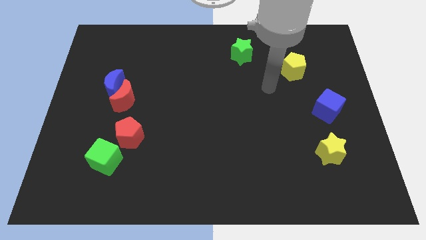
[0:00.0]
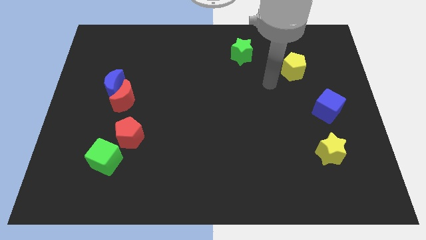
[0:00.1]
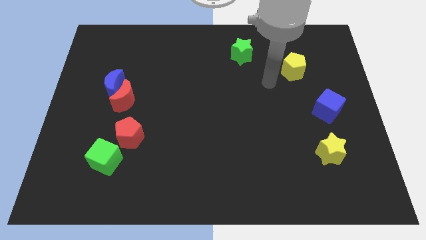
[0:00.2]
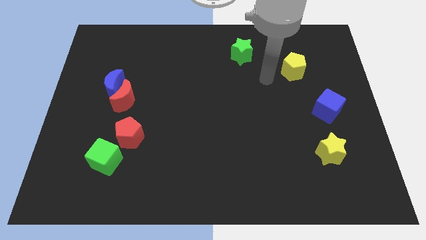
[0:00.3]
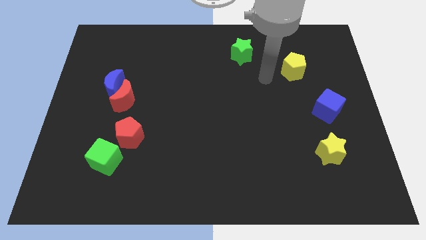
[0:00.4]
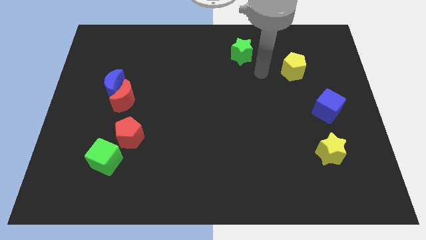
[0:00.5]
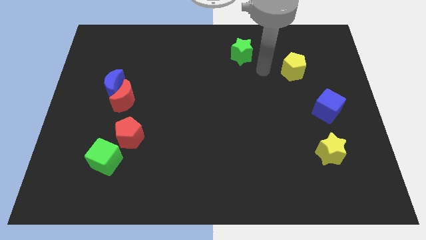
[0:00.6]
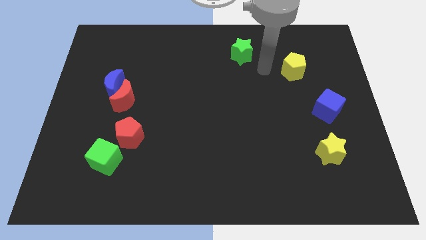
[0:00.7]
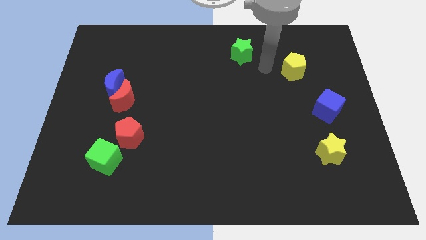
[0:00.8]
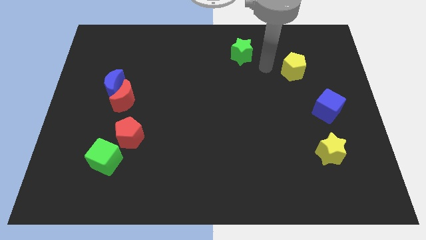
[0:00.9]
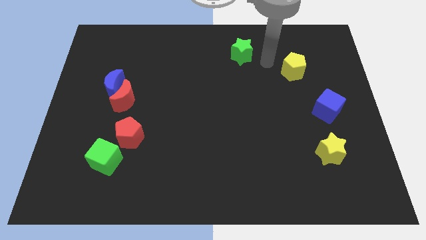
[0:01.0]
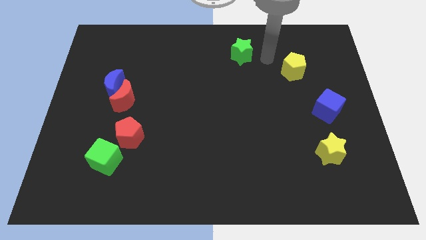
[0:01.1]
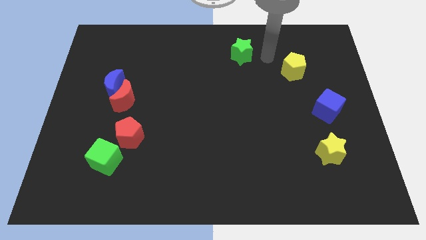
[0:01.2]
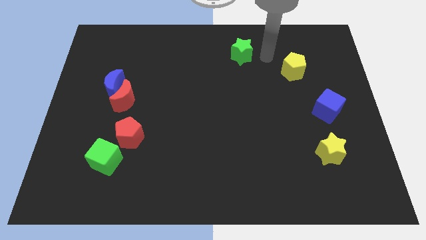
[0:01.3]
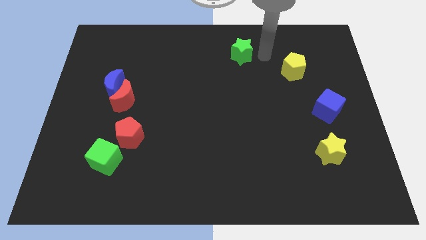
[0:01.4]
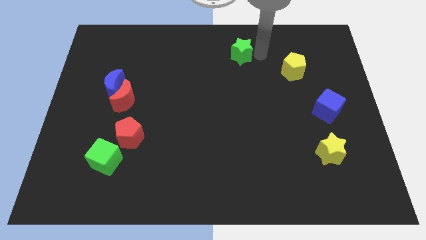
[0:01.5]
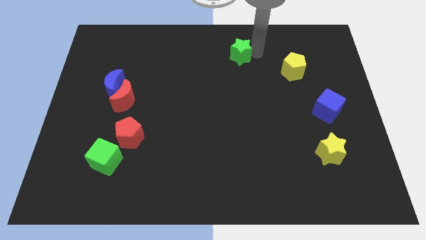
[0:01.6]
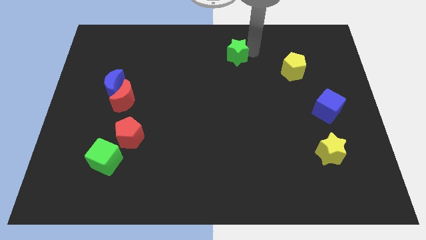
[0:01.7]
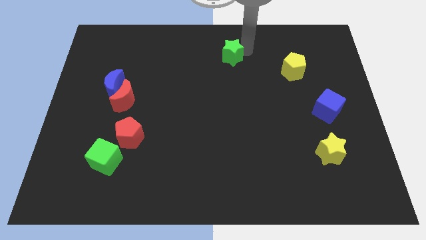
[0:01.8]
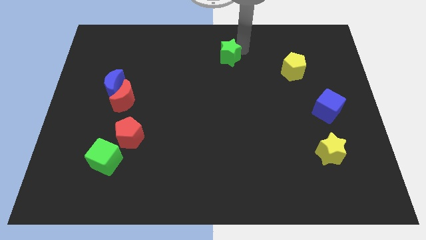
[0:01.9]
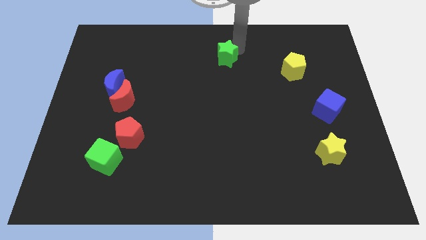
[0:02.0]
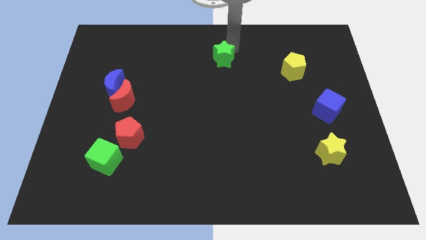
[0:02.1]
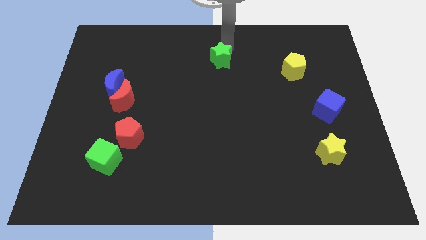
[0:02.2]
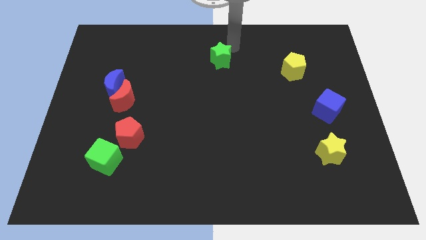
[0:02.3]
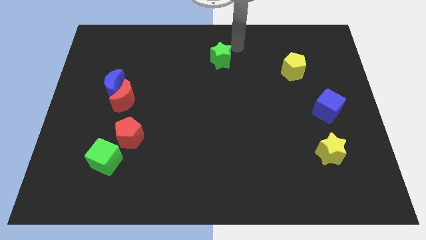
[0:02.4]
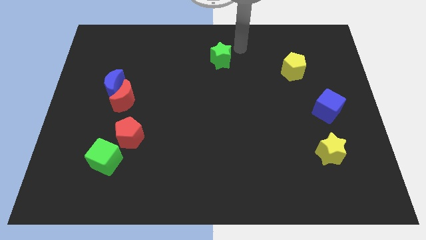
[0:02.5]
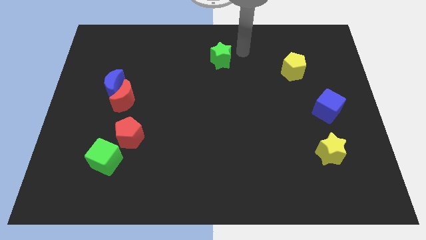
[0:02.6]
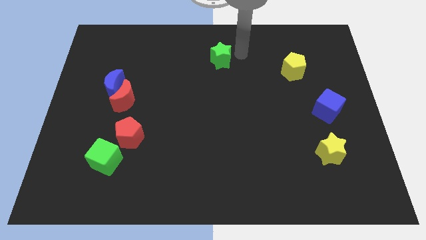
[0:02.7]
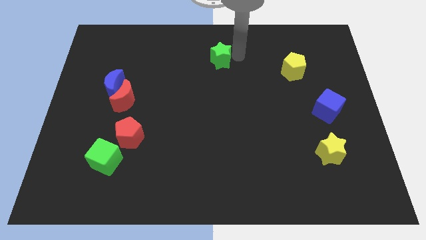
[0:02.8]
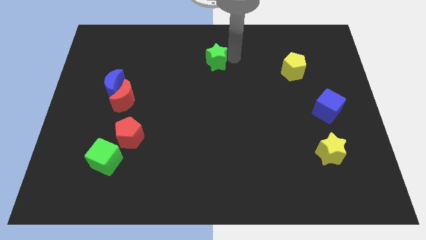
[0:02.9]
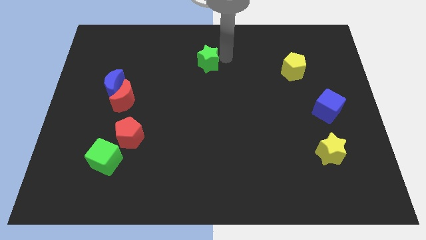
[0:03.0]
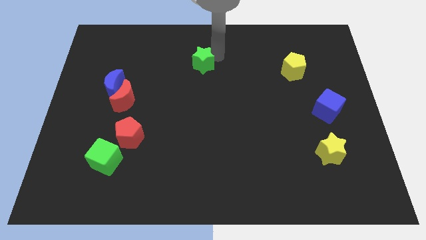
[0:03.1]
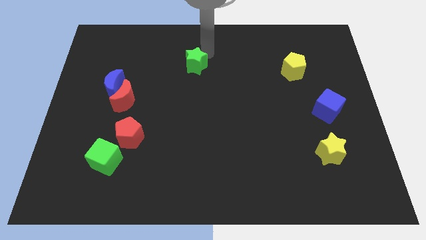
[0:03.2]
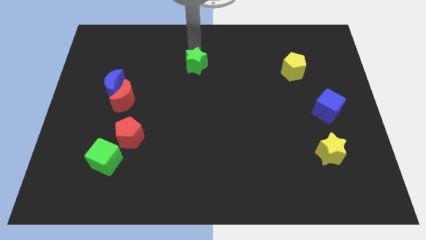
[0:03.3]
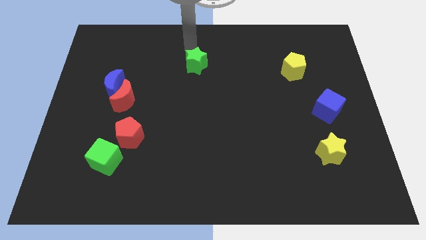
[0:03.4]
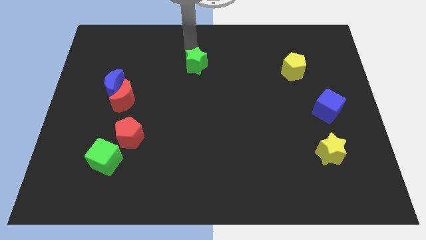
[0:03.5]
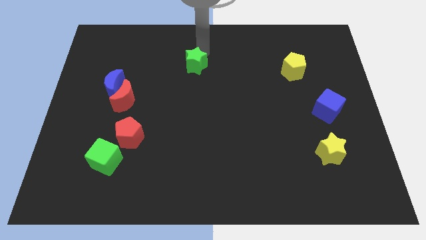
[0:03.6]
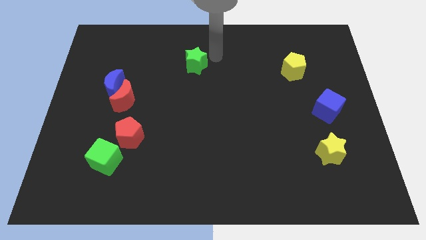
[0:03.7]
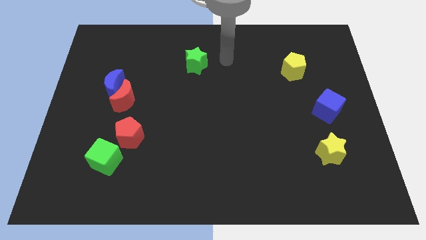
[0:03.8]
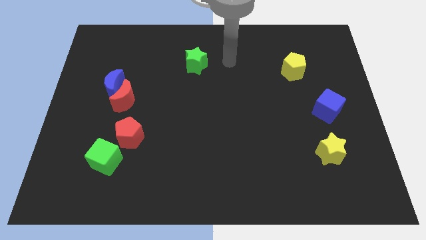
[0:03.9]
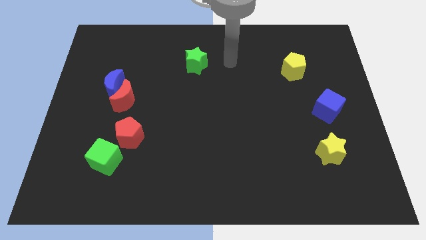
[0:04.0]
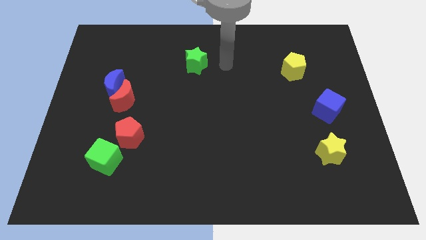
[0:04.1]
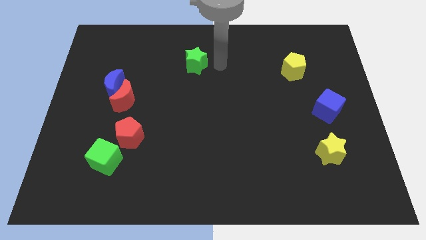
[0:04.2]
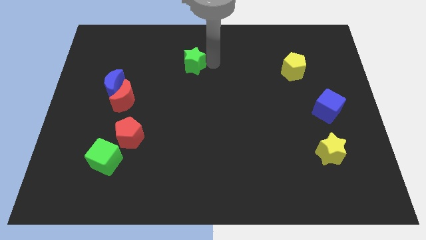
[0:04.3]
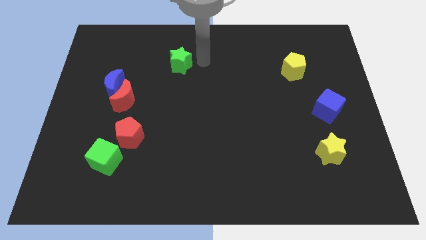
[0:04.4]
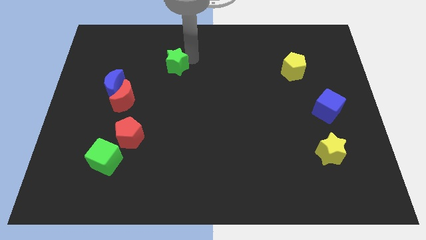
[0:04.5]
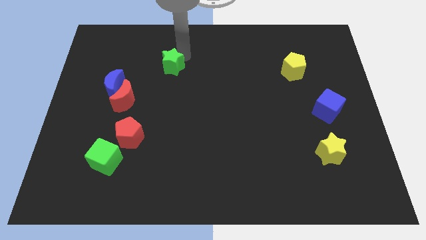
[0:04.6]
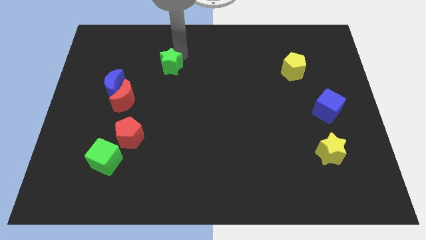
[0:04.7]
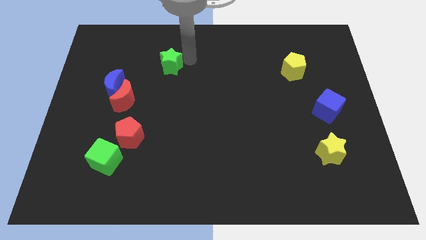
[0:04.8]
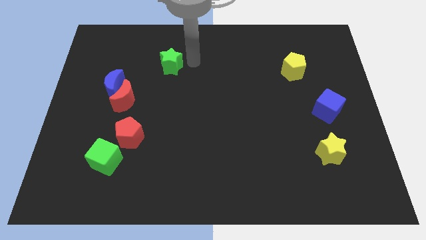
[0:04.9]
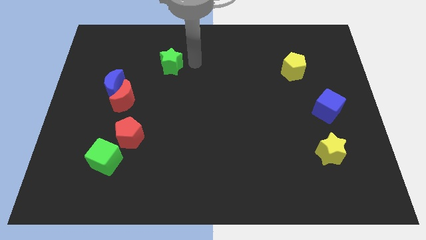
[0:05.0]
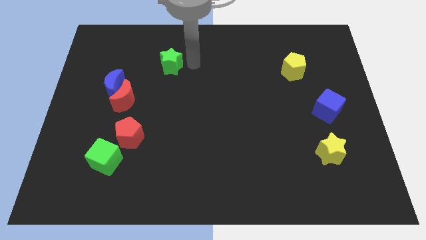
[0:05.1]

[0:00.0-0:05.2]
push the green star to the left of the board

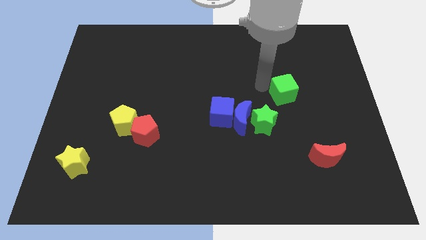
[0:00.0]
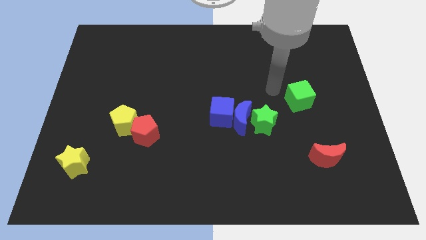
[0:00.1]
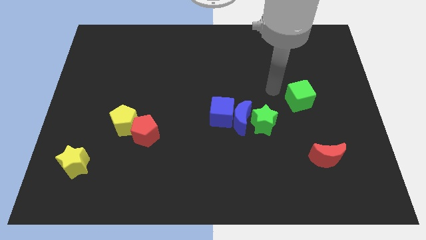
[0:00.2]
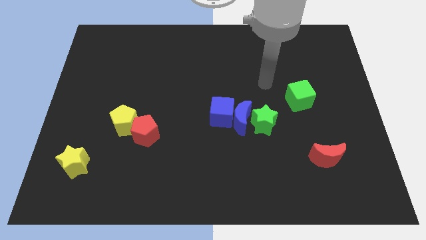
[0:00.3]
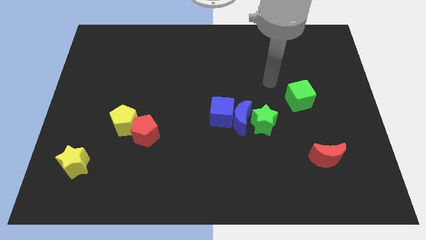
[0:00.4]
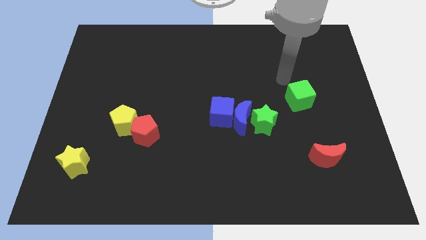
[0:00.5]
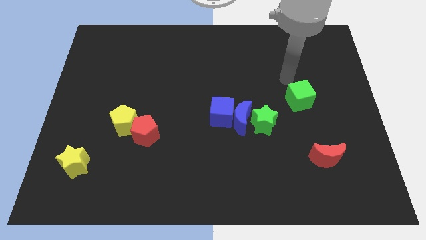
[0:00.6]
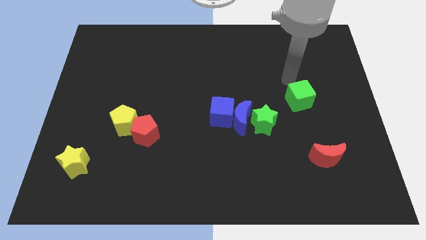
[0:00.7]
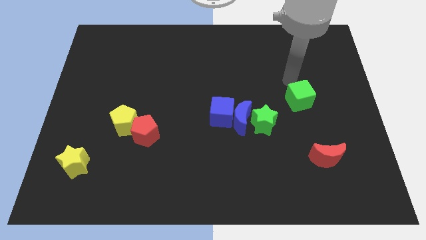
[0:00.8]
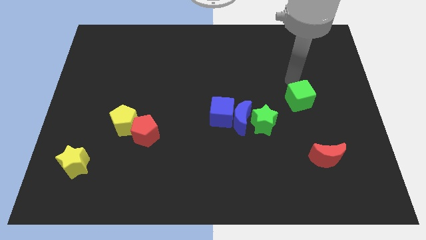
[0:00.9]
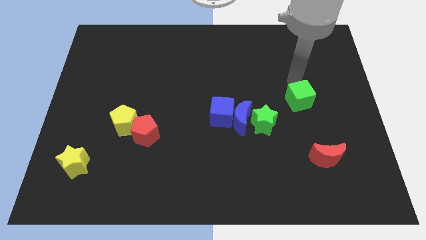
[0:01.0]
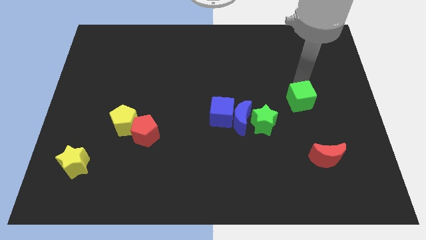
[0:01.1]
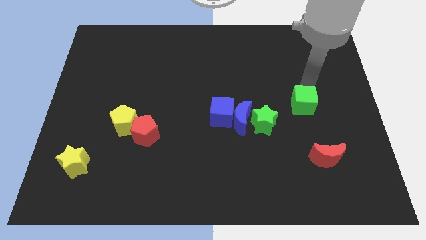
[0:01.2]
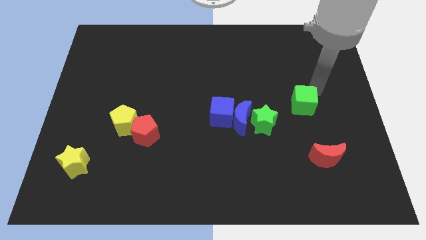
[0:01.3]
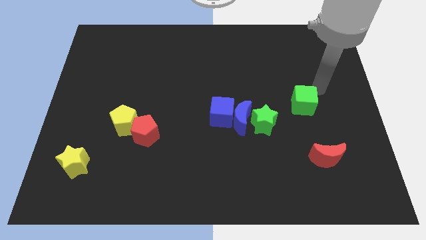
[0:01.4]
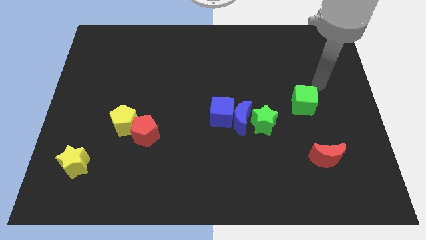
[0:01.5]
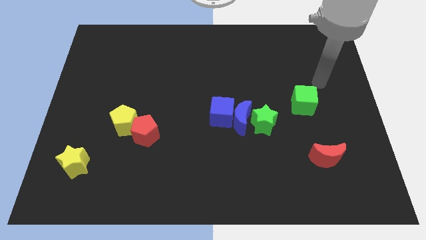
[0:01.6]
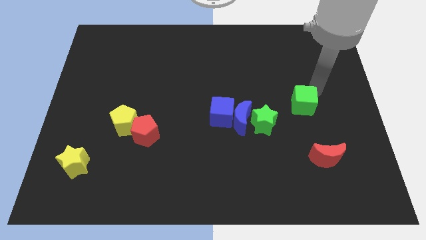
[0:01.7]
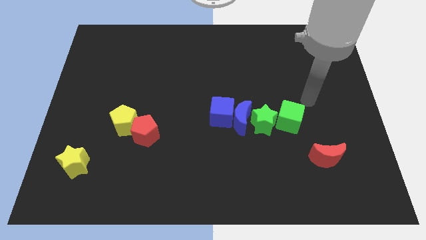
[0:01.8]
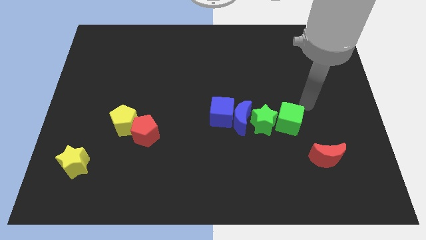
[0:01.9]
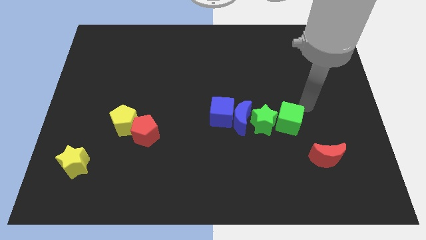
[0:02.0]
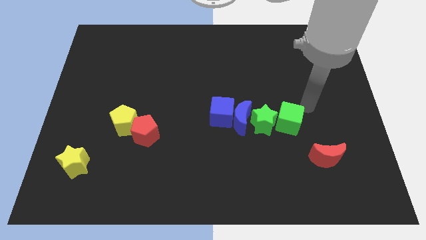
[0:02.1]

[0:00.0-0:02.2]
push the green cube to the right of the green star

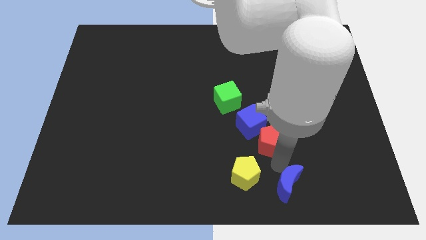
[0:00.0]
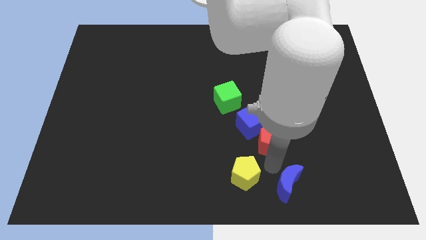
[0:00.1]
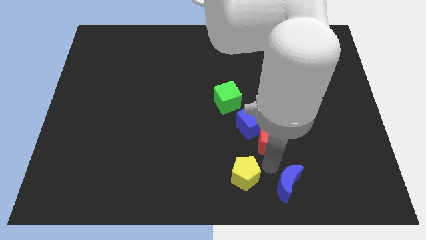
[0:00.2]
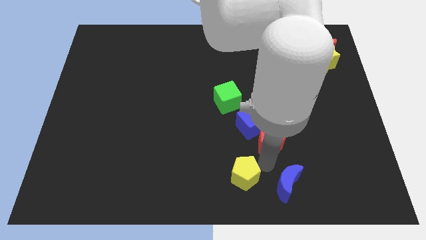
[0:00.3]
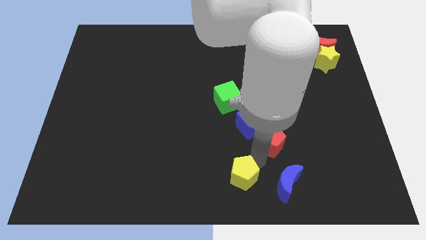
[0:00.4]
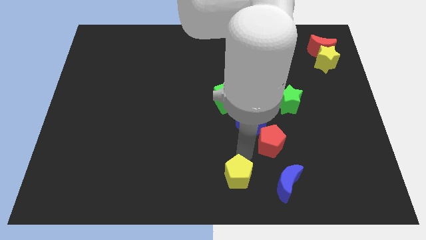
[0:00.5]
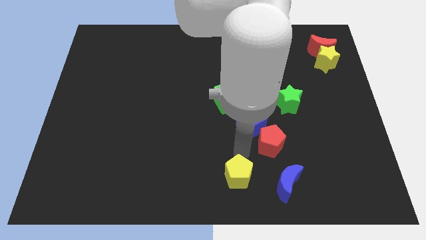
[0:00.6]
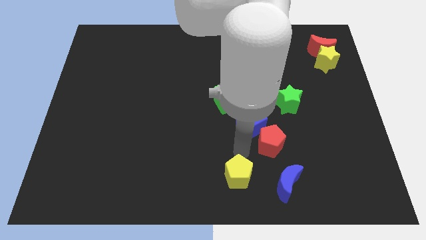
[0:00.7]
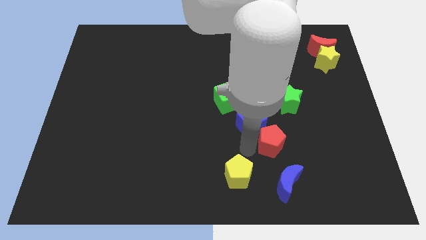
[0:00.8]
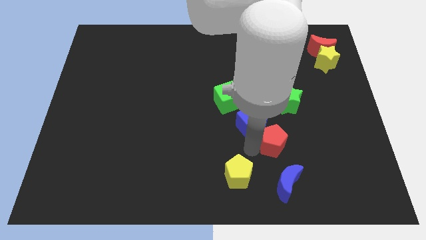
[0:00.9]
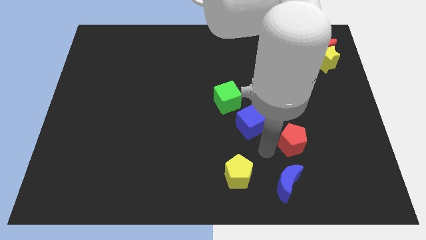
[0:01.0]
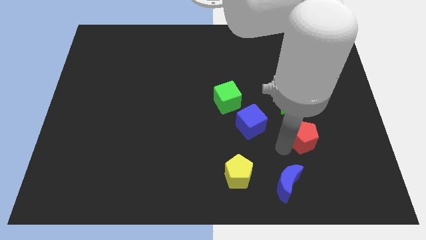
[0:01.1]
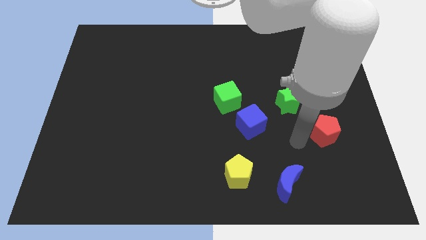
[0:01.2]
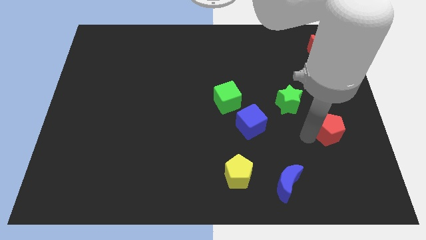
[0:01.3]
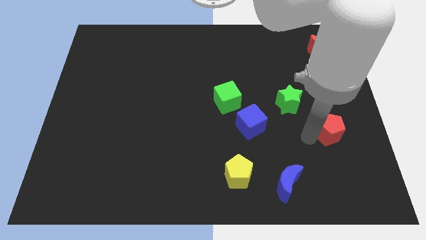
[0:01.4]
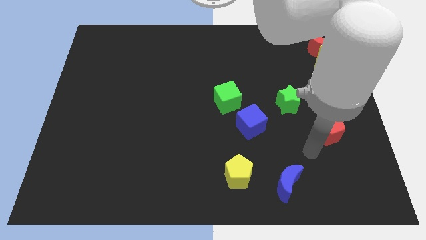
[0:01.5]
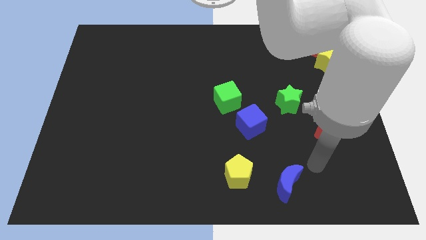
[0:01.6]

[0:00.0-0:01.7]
move the red pentagon slightly to the right
